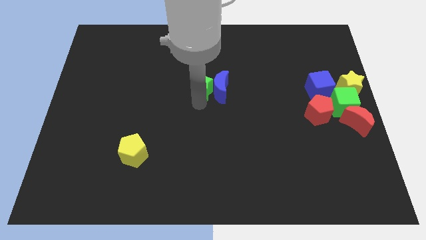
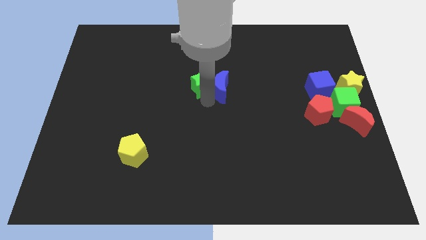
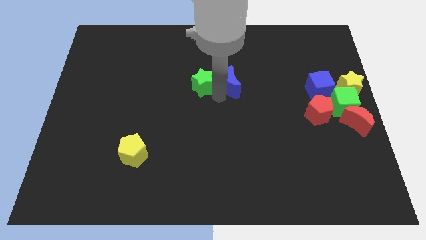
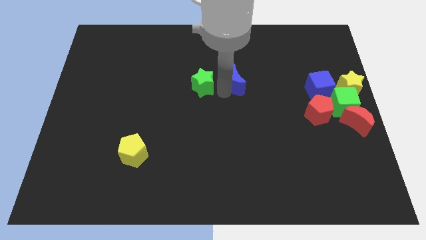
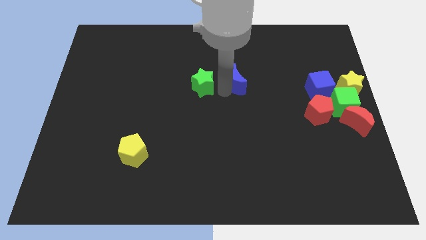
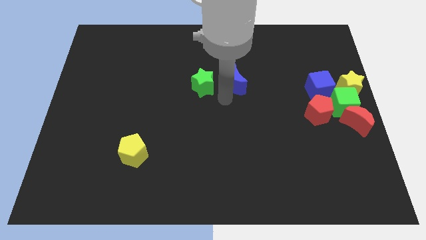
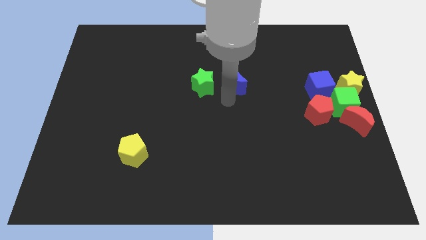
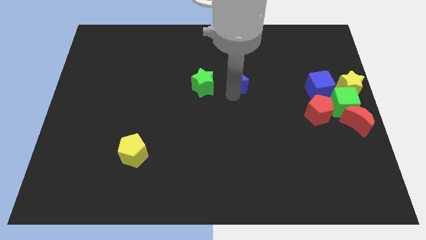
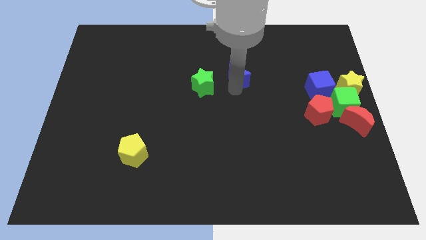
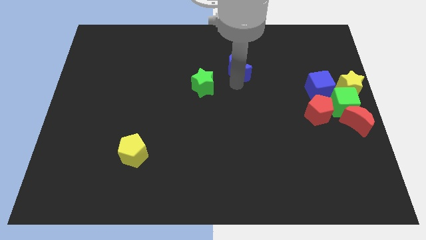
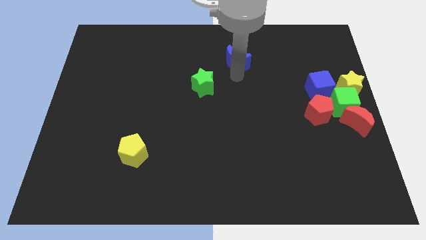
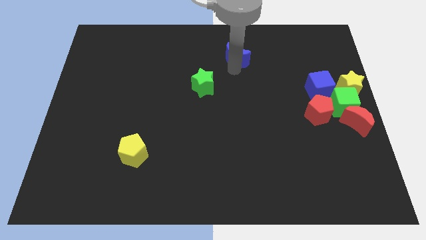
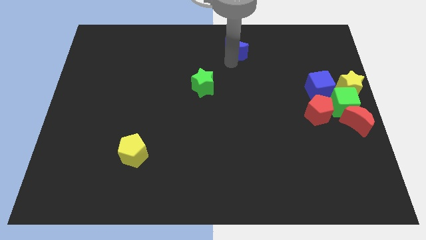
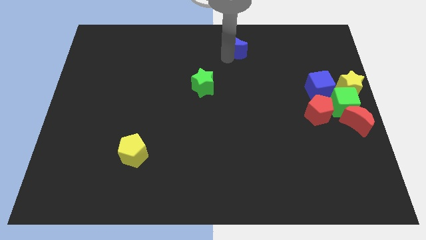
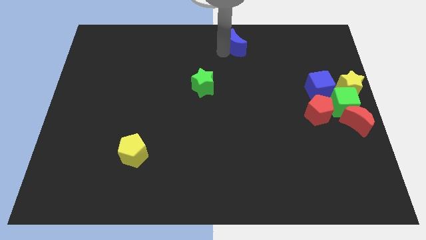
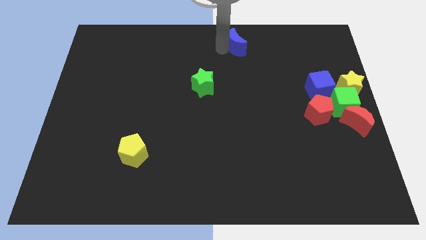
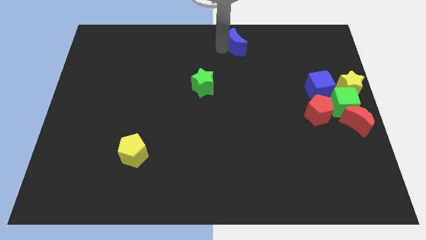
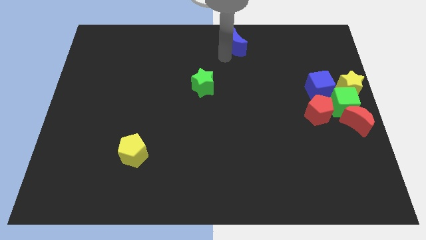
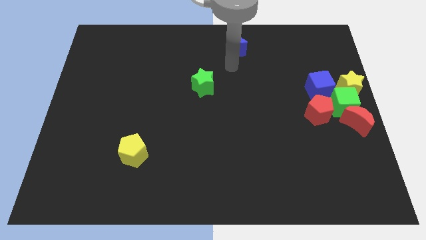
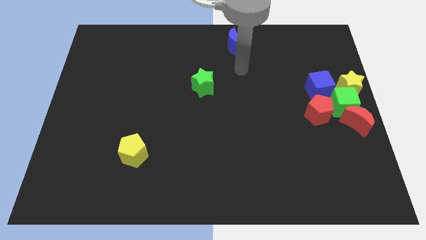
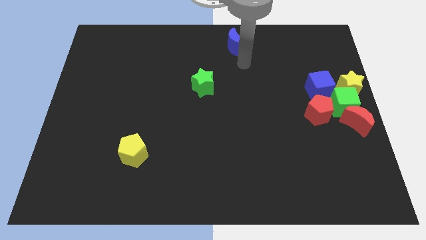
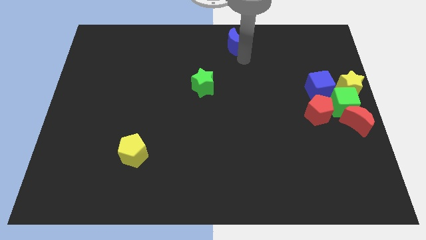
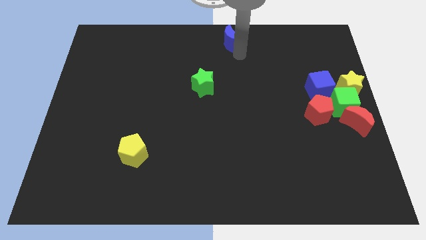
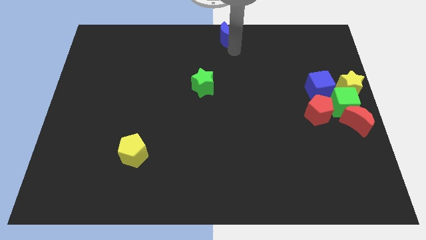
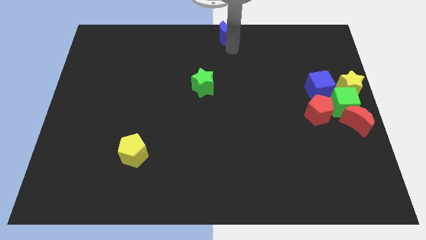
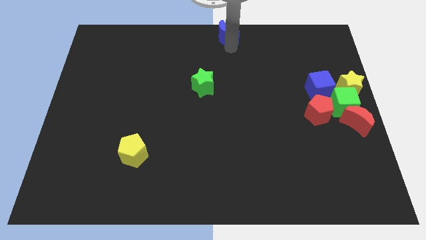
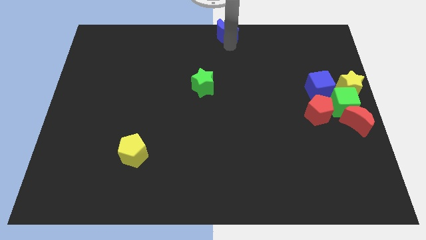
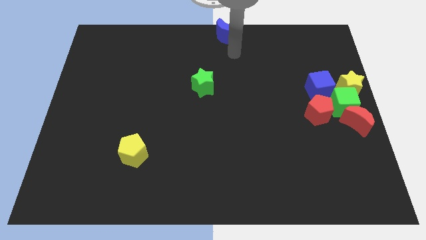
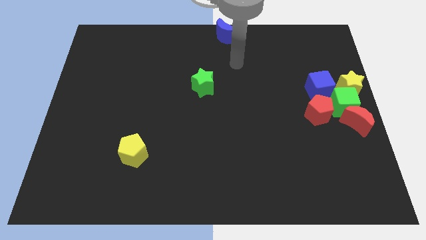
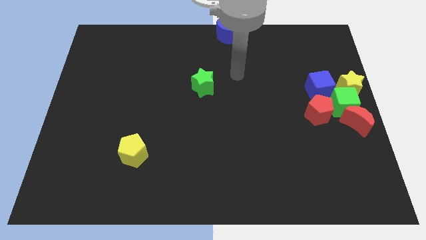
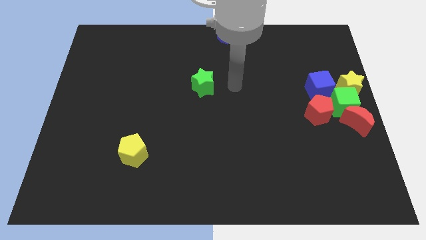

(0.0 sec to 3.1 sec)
push the blue crescent to the top center of the board

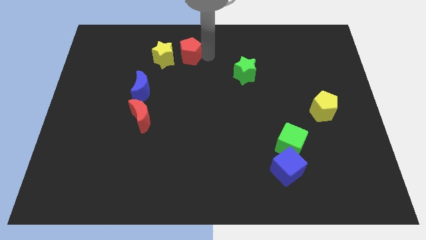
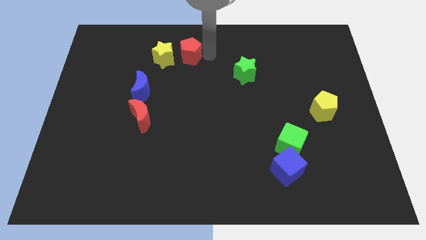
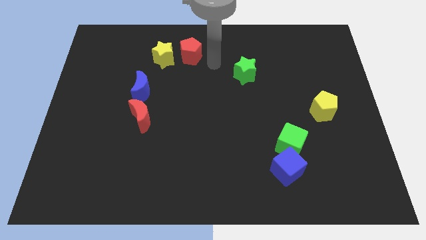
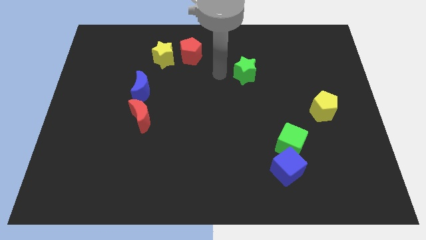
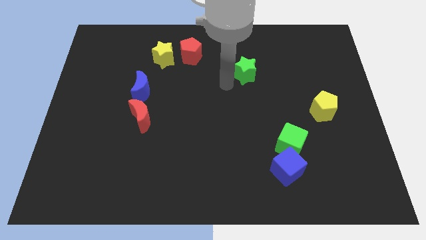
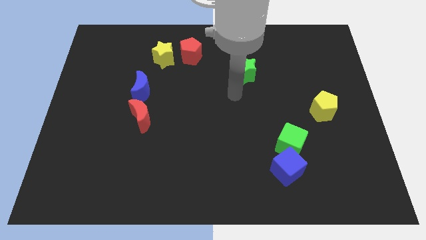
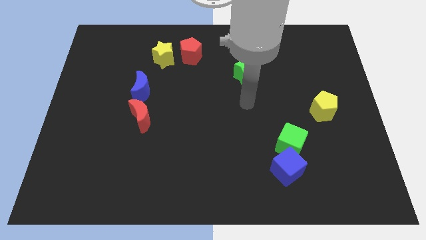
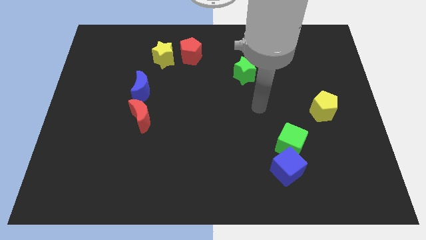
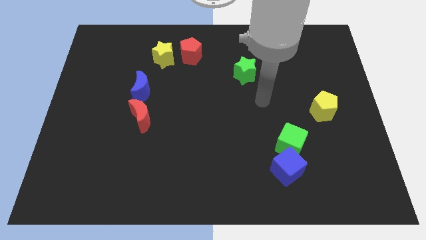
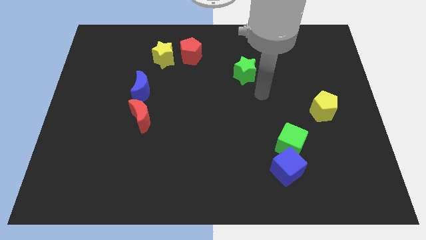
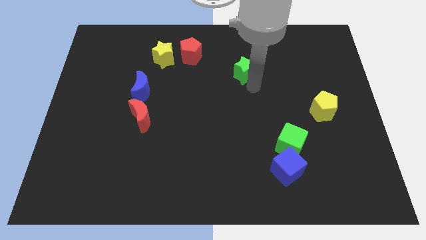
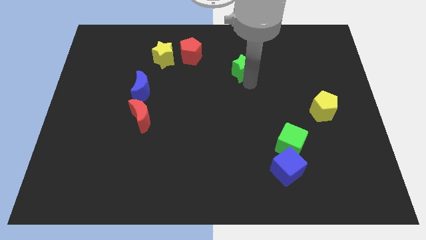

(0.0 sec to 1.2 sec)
move your arm towards the green star

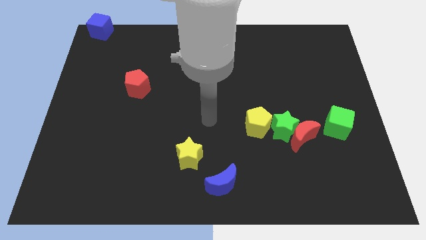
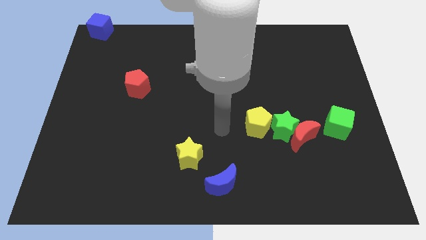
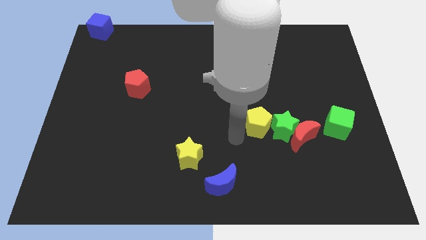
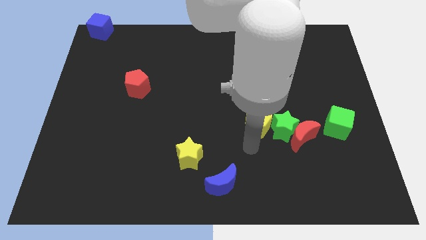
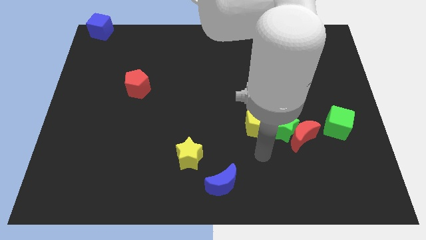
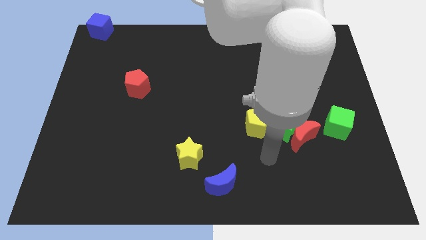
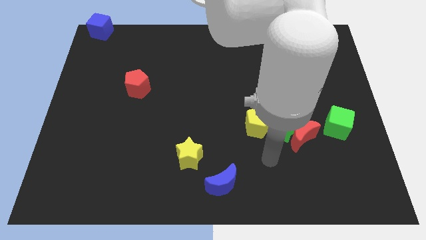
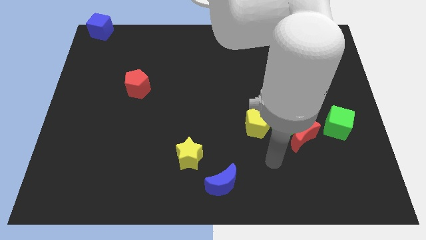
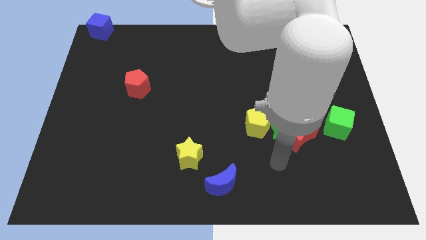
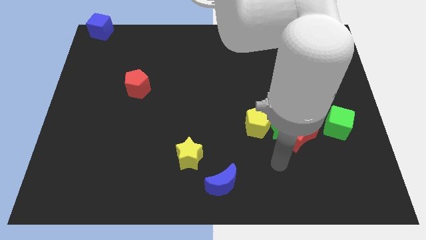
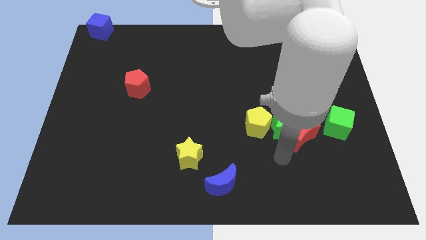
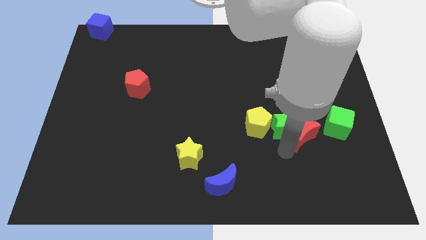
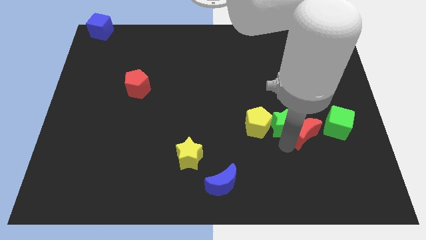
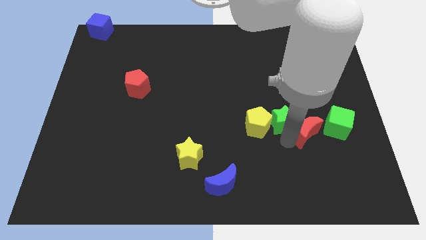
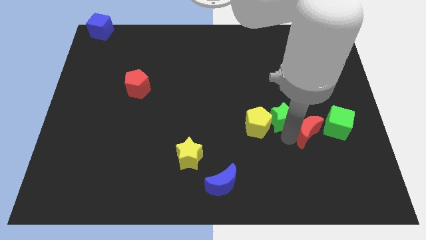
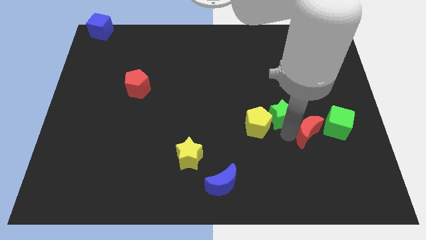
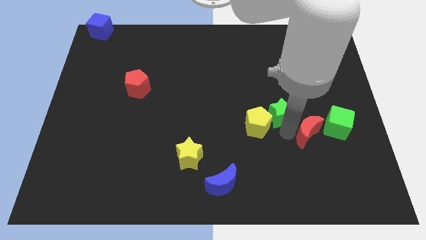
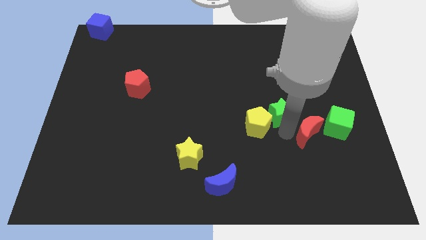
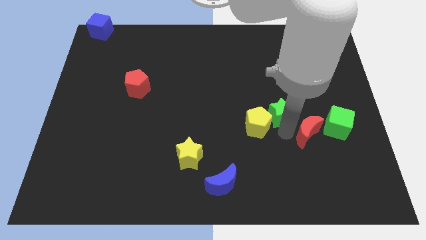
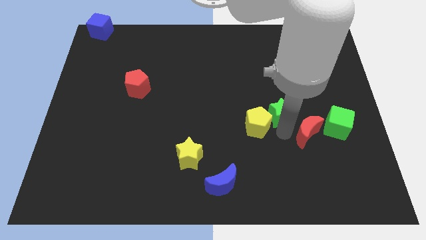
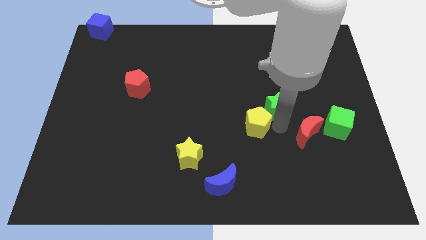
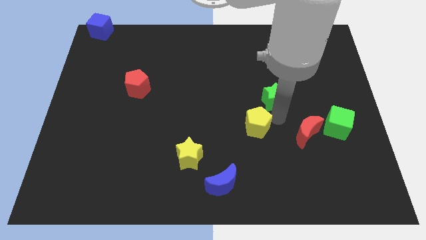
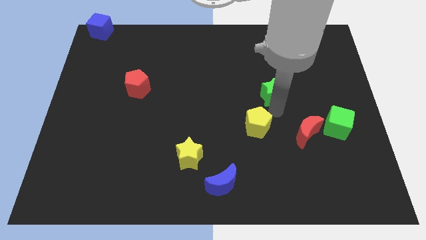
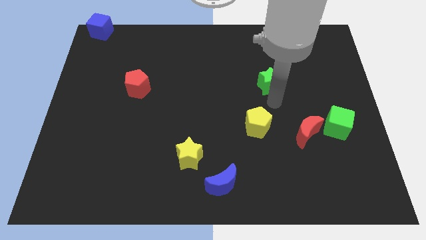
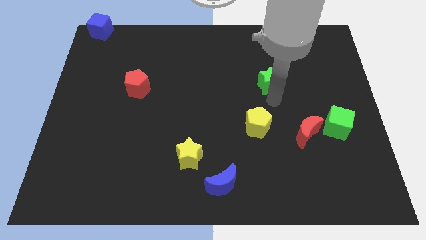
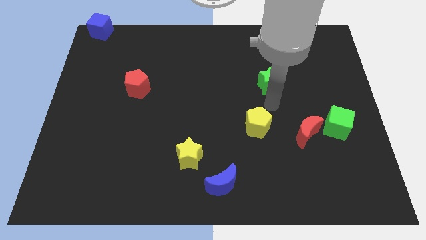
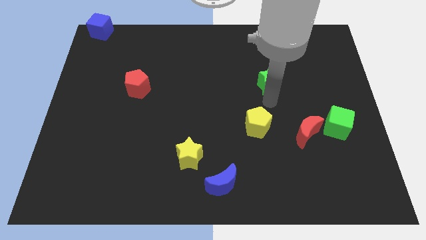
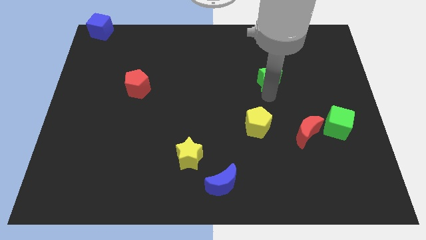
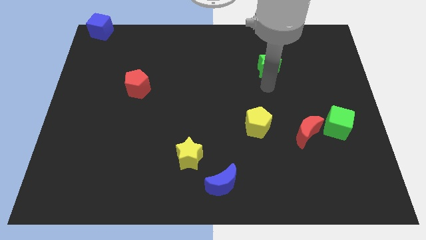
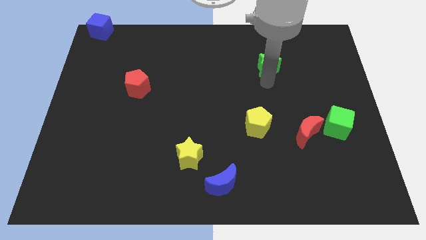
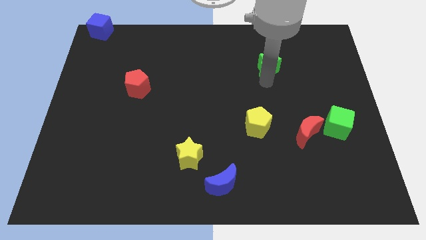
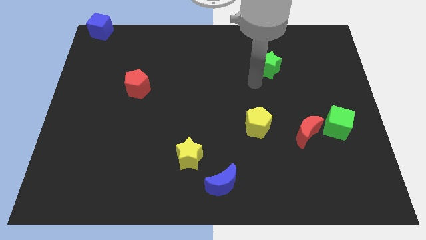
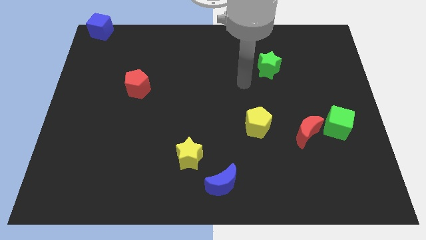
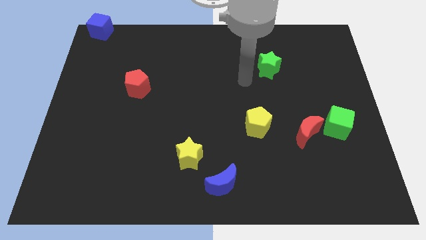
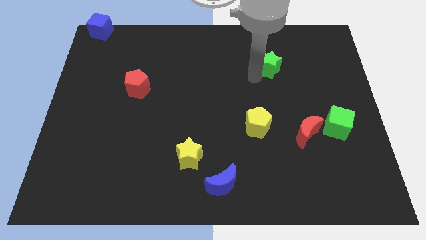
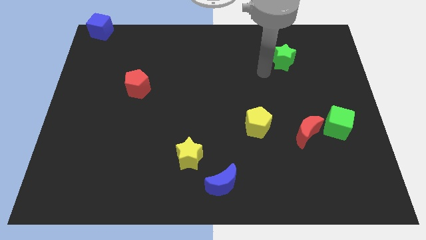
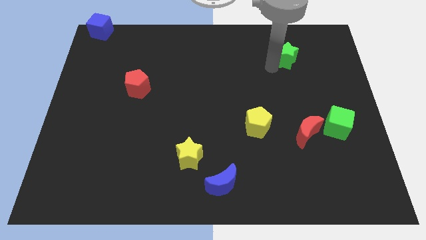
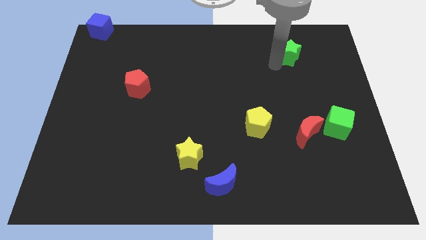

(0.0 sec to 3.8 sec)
separate the green star and red moon

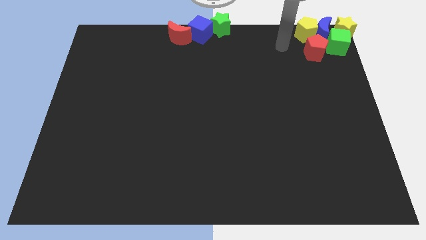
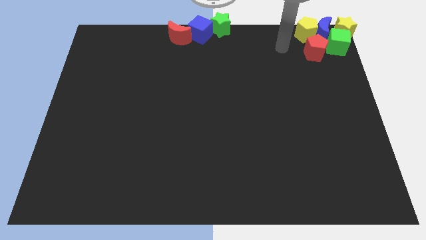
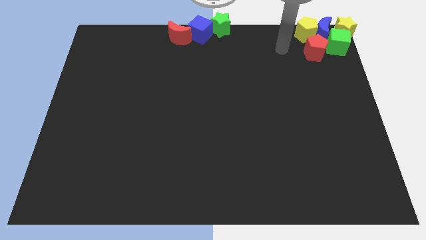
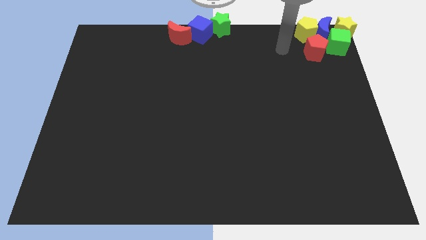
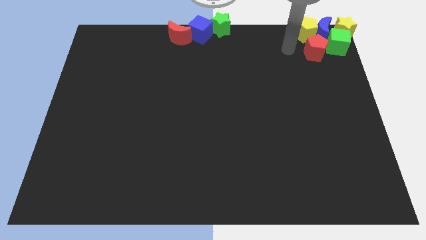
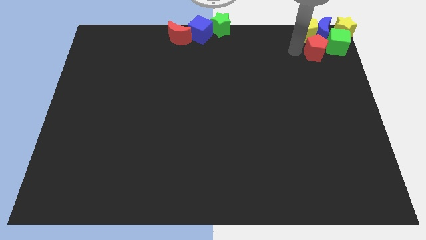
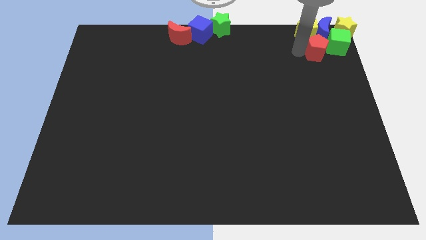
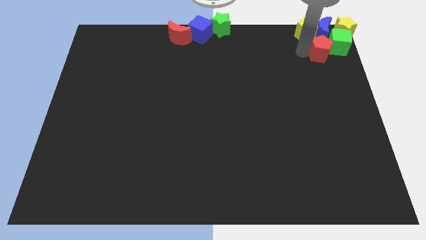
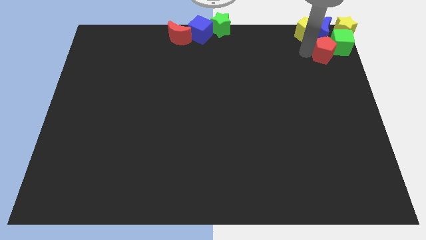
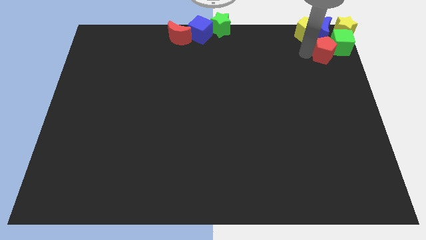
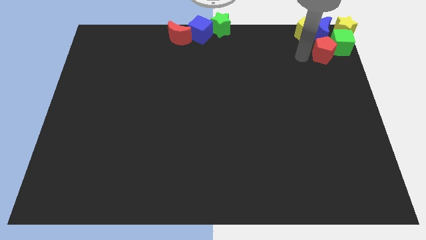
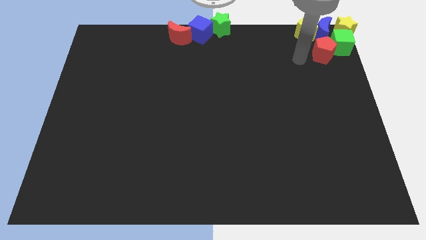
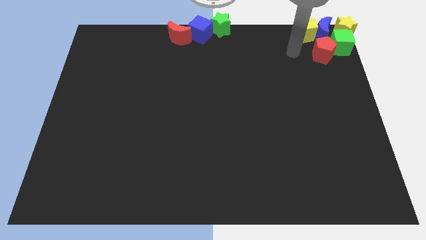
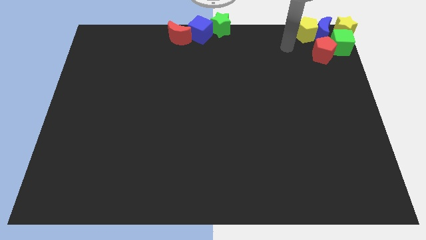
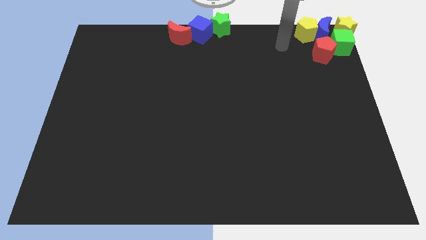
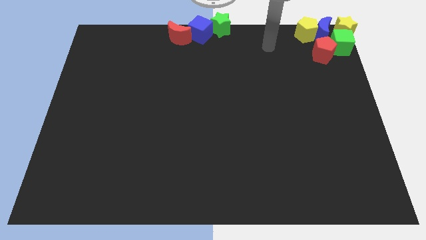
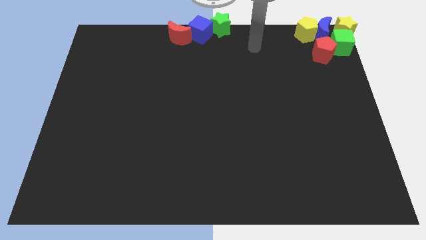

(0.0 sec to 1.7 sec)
push the red pentagon into the green cube
